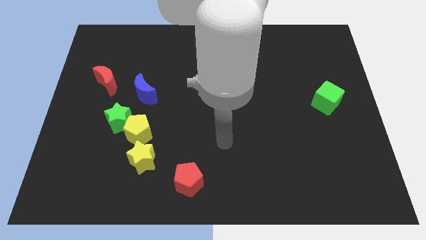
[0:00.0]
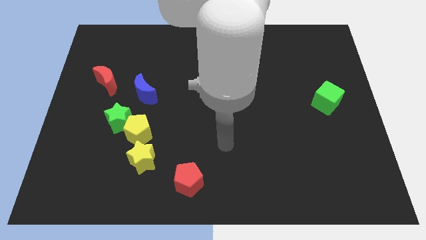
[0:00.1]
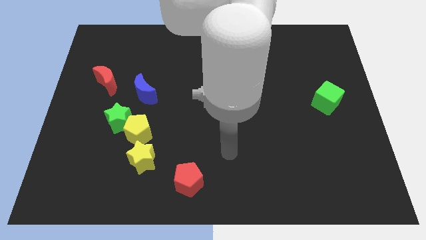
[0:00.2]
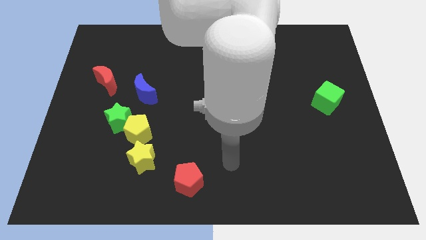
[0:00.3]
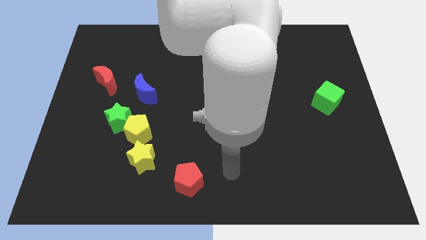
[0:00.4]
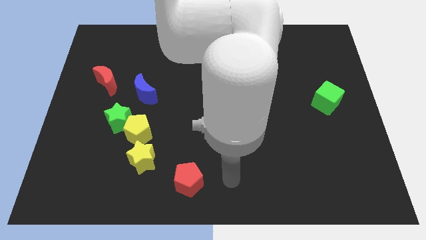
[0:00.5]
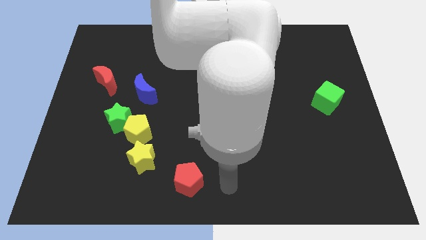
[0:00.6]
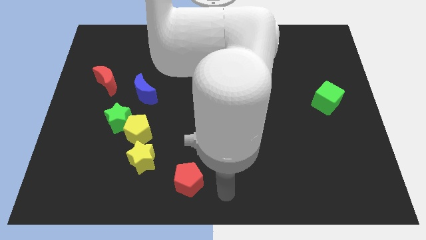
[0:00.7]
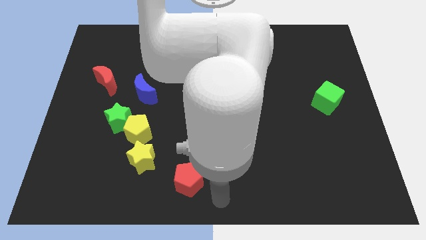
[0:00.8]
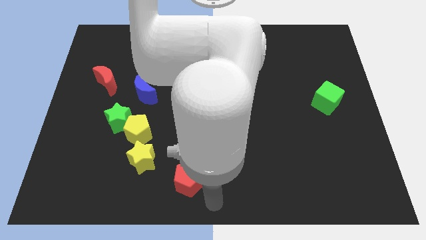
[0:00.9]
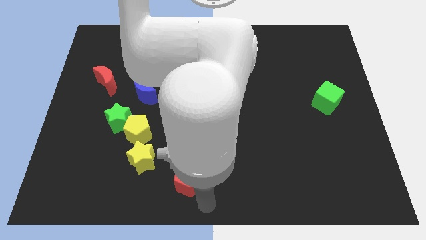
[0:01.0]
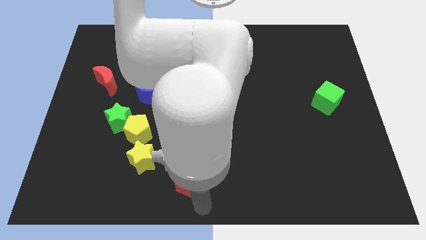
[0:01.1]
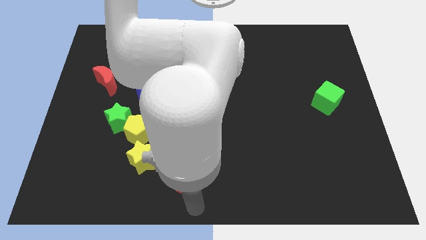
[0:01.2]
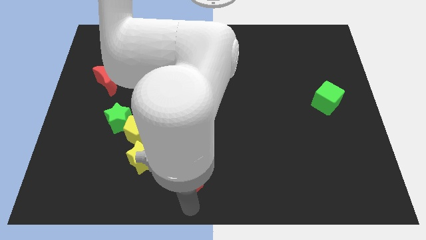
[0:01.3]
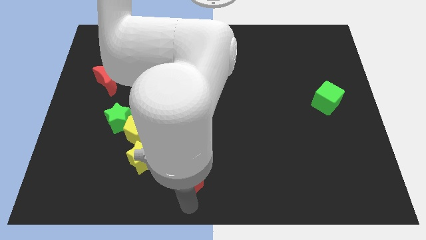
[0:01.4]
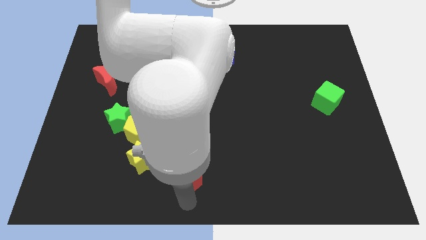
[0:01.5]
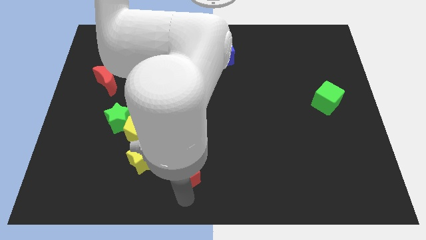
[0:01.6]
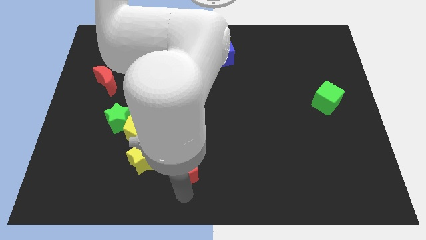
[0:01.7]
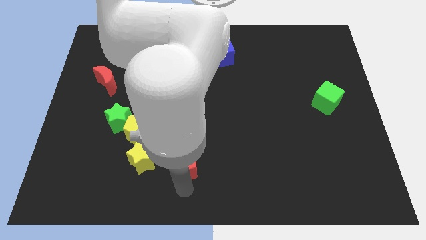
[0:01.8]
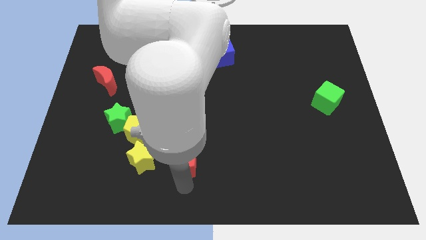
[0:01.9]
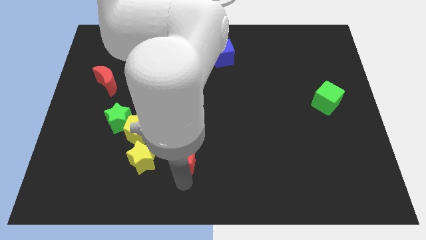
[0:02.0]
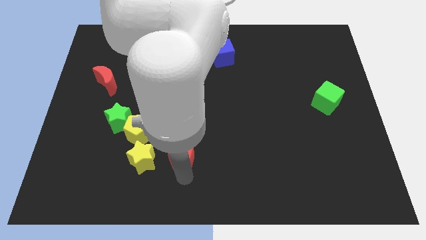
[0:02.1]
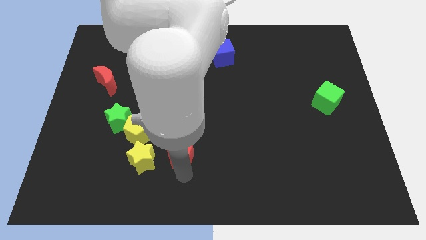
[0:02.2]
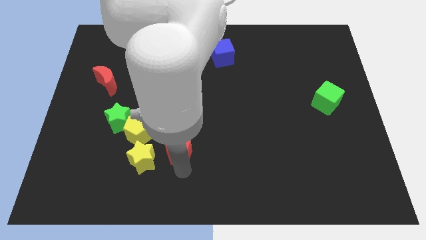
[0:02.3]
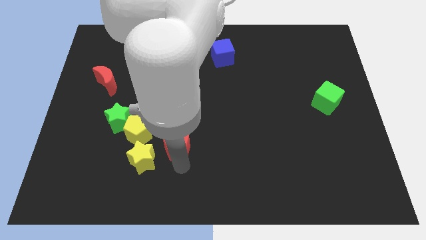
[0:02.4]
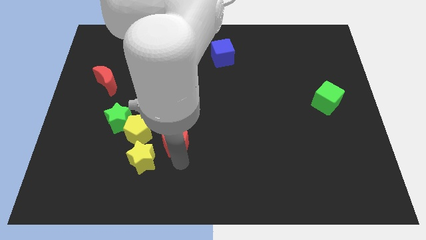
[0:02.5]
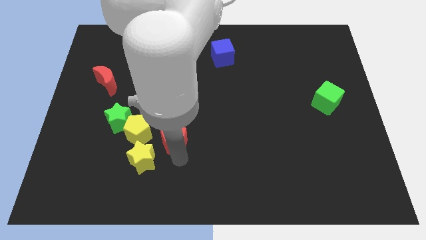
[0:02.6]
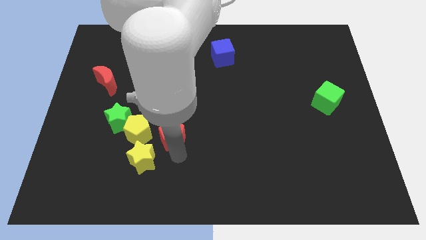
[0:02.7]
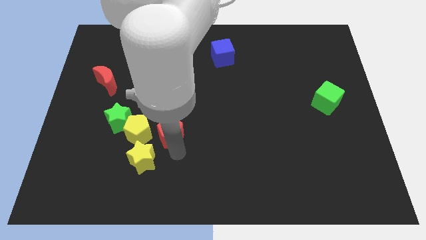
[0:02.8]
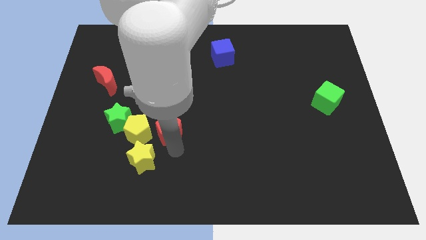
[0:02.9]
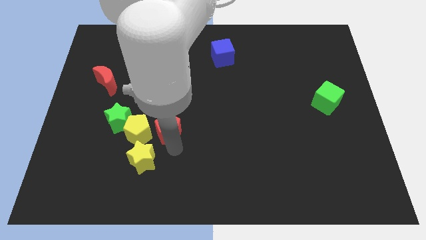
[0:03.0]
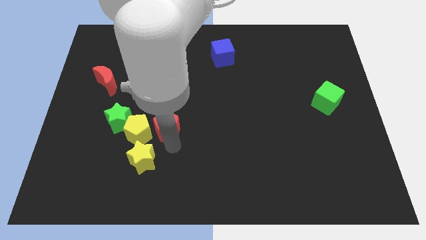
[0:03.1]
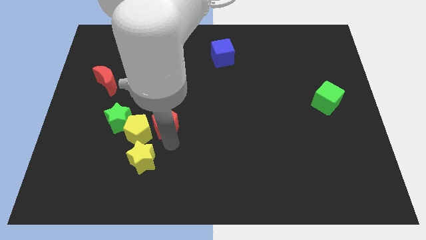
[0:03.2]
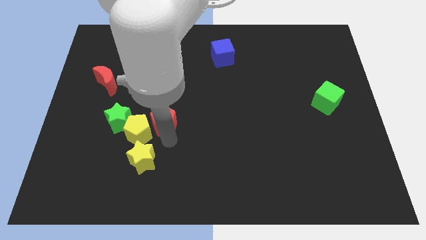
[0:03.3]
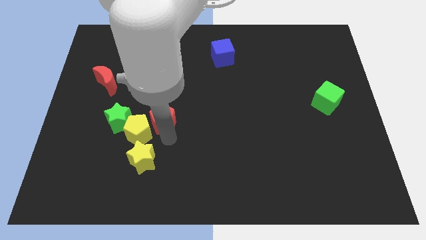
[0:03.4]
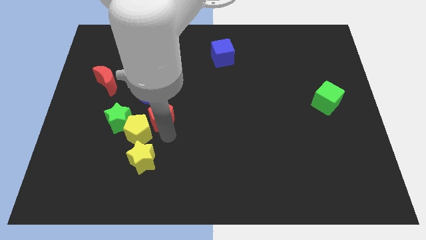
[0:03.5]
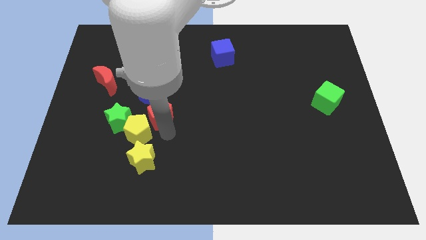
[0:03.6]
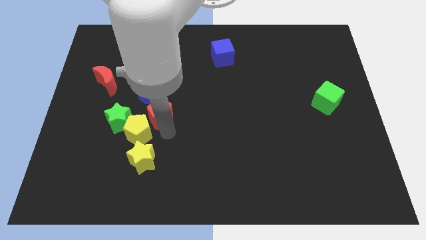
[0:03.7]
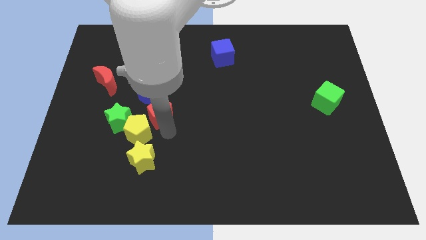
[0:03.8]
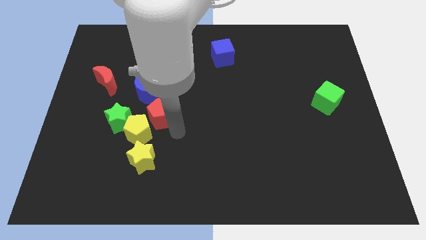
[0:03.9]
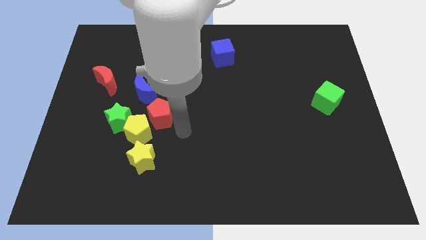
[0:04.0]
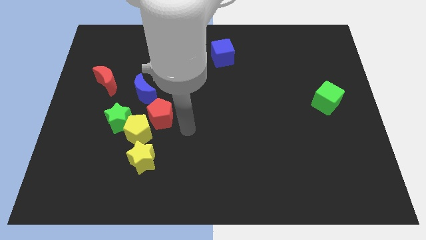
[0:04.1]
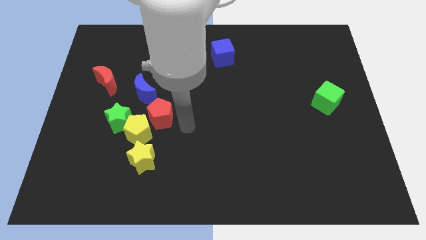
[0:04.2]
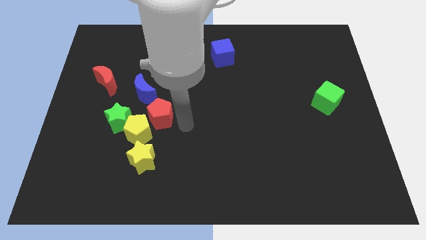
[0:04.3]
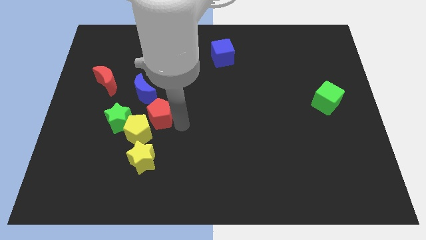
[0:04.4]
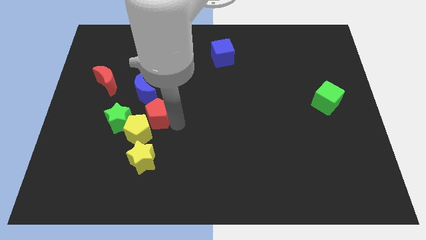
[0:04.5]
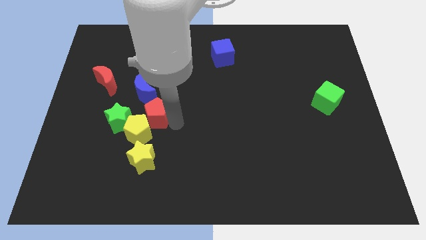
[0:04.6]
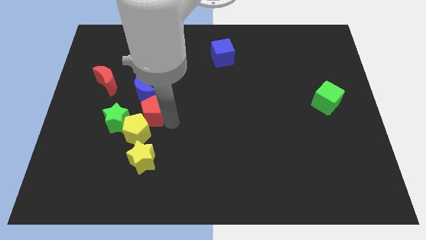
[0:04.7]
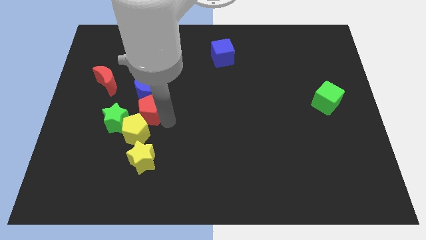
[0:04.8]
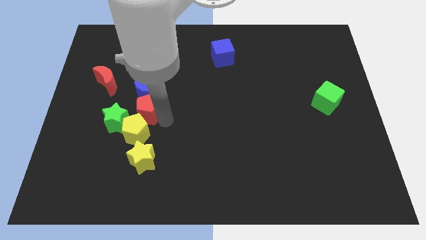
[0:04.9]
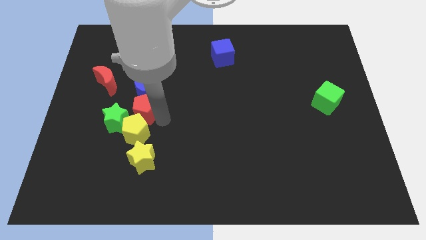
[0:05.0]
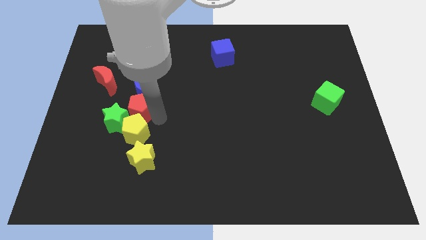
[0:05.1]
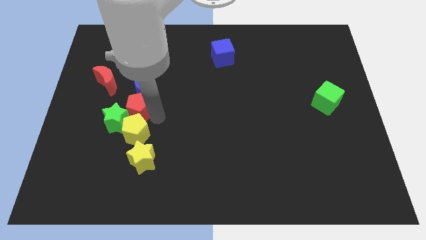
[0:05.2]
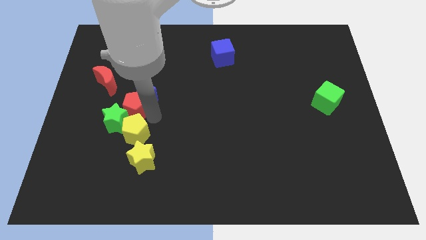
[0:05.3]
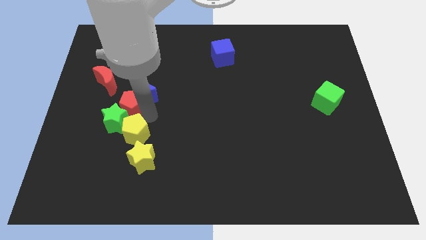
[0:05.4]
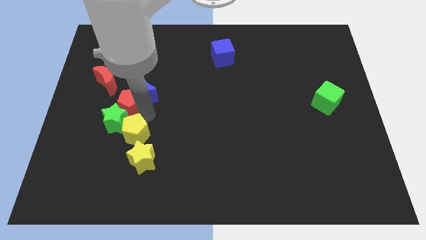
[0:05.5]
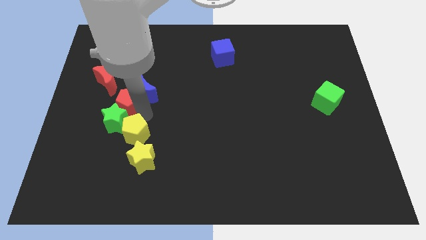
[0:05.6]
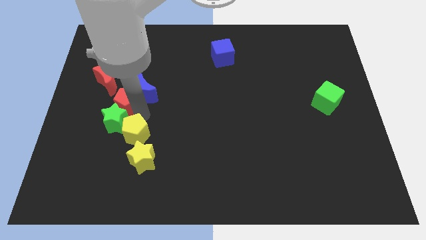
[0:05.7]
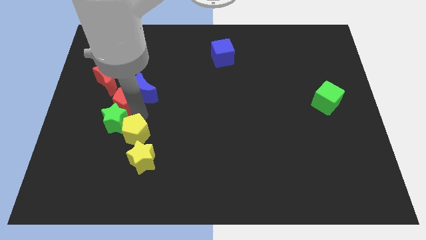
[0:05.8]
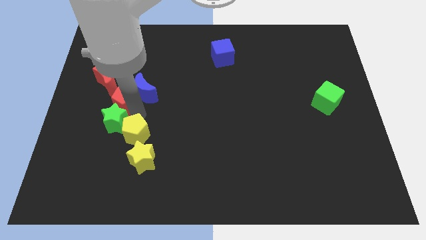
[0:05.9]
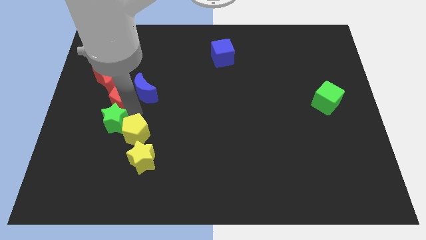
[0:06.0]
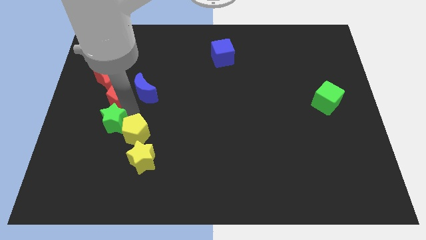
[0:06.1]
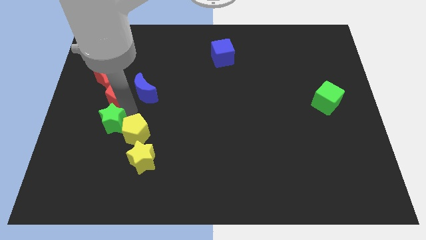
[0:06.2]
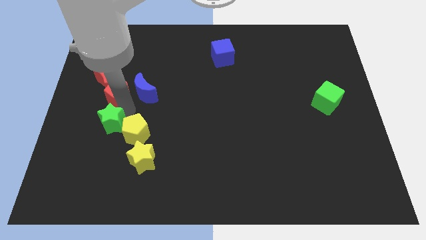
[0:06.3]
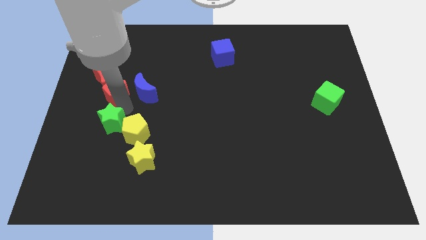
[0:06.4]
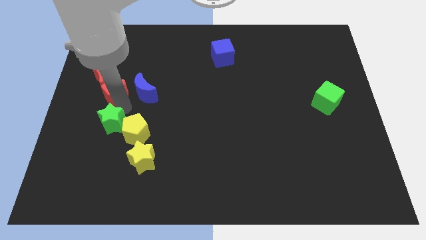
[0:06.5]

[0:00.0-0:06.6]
move the red pentagon to the red moon

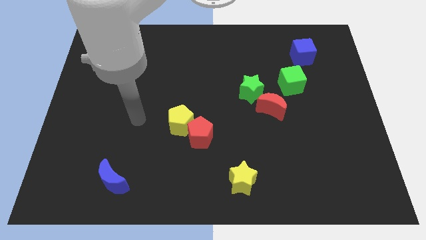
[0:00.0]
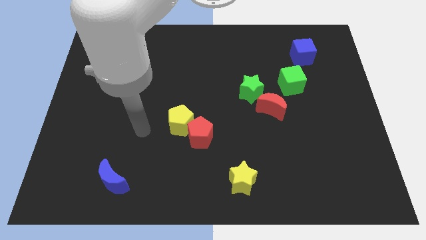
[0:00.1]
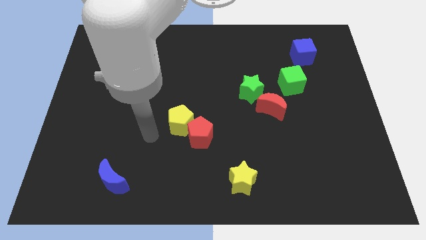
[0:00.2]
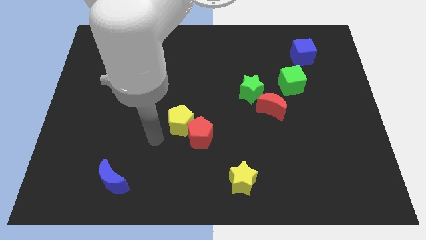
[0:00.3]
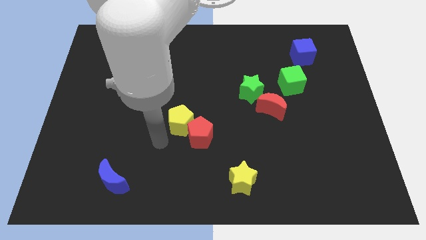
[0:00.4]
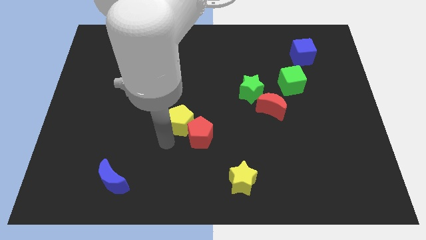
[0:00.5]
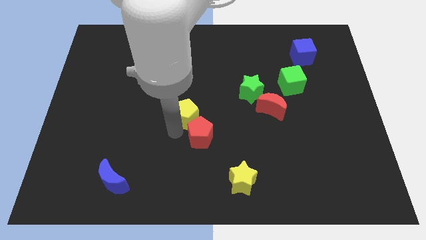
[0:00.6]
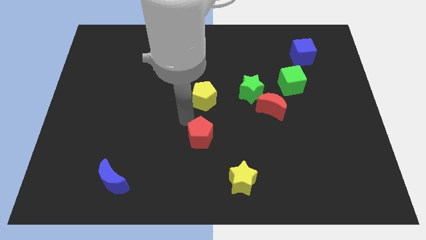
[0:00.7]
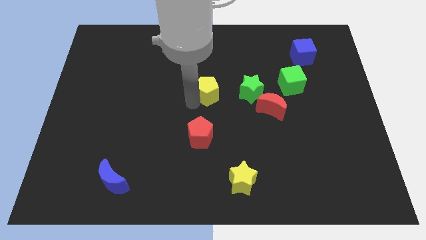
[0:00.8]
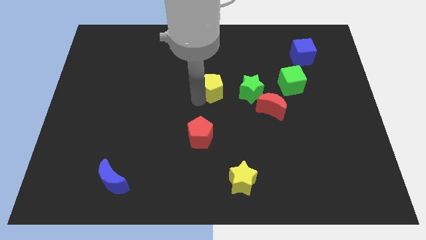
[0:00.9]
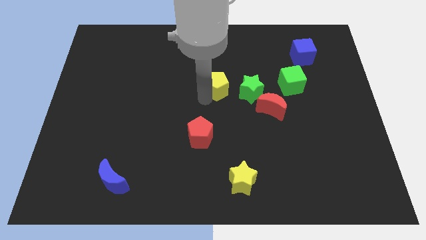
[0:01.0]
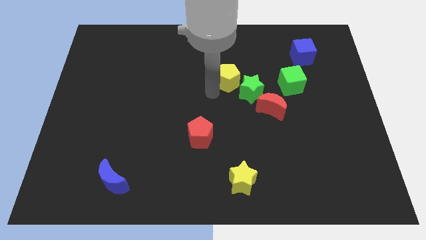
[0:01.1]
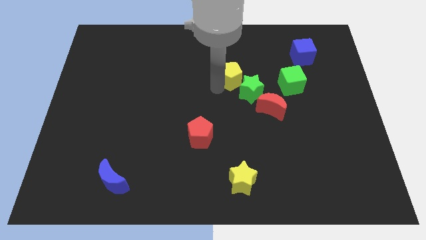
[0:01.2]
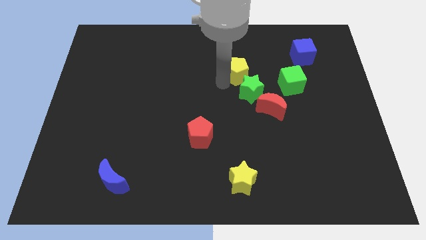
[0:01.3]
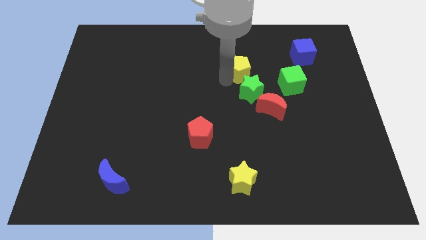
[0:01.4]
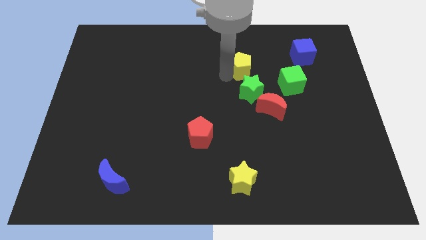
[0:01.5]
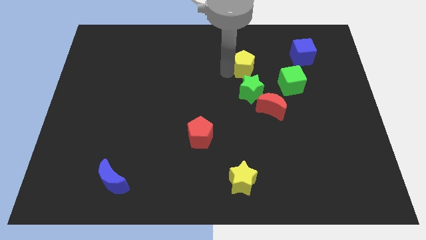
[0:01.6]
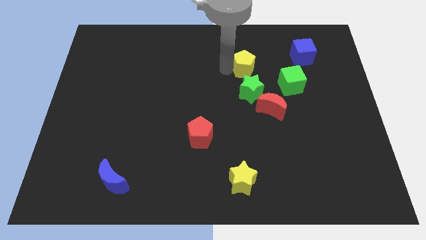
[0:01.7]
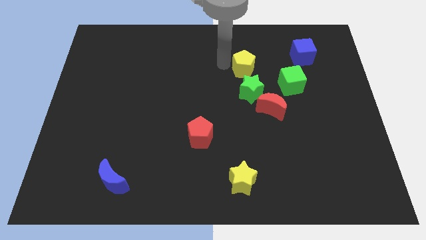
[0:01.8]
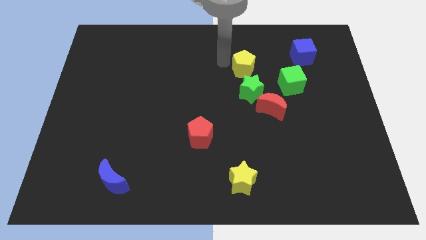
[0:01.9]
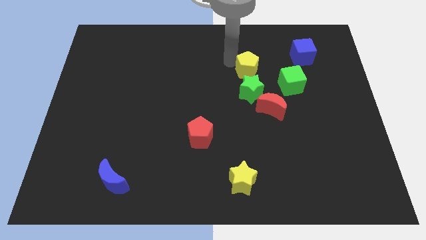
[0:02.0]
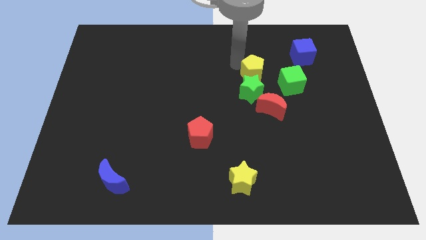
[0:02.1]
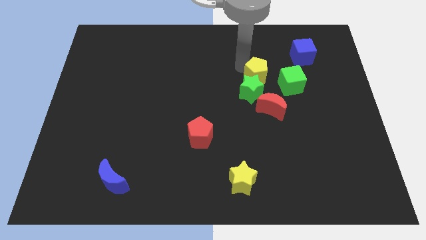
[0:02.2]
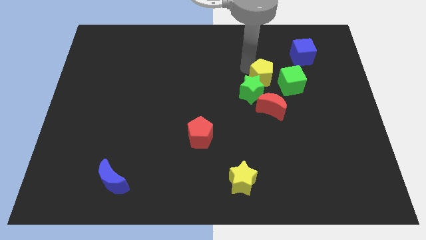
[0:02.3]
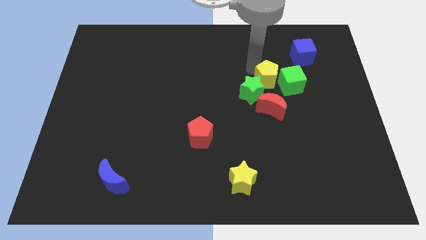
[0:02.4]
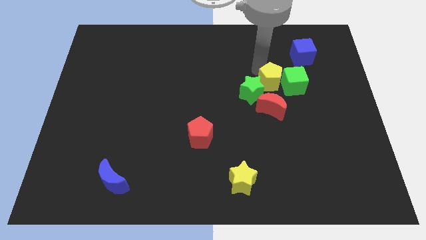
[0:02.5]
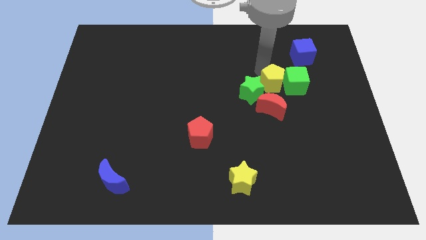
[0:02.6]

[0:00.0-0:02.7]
push the yellow pentagon towards the green cube
